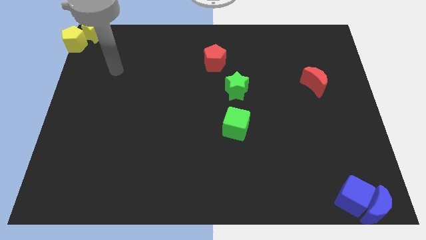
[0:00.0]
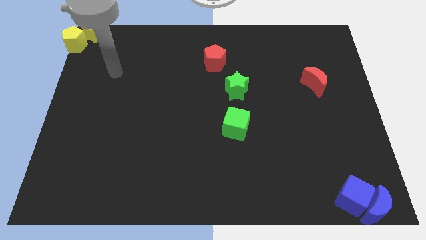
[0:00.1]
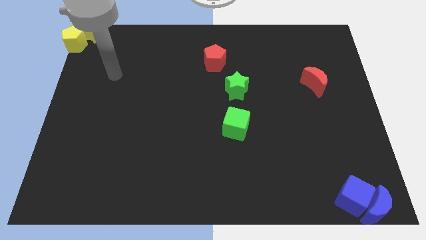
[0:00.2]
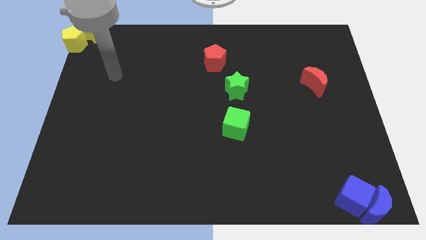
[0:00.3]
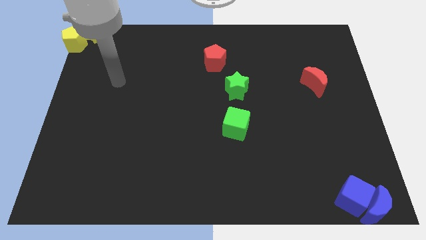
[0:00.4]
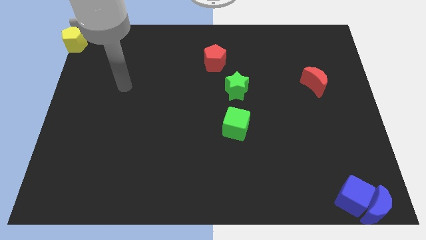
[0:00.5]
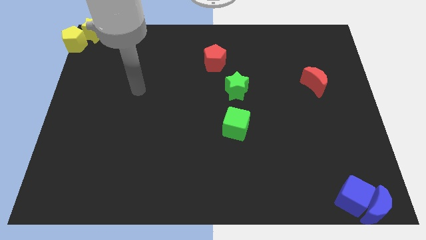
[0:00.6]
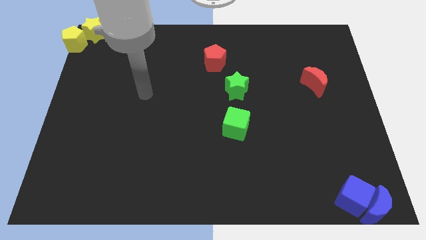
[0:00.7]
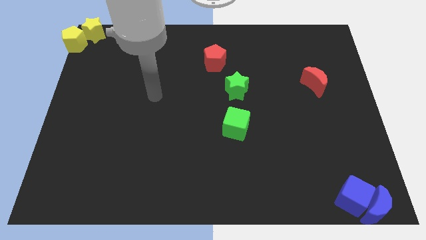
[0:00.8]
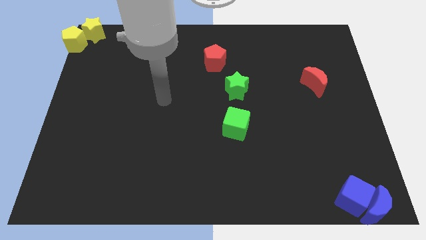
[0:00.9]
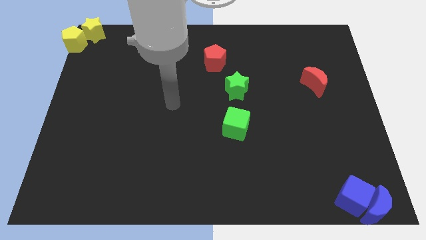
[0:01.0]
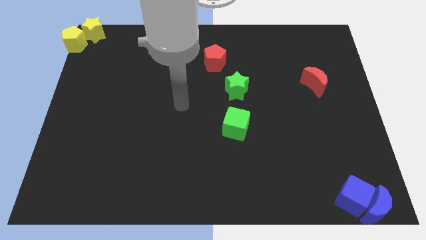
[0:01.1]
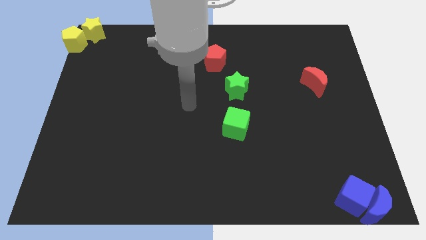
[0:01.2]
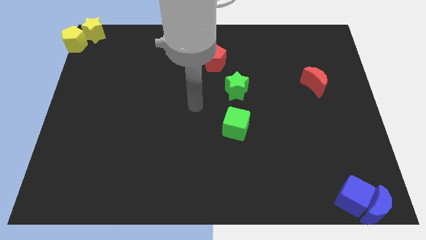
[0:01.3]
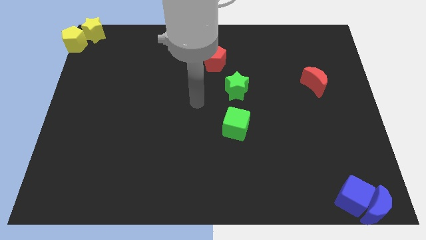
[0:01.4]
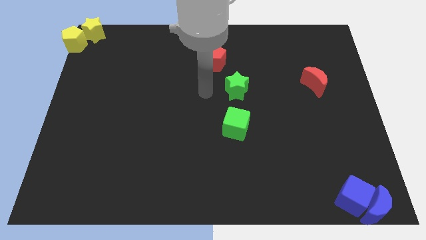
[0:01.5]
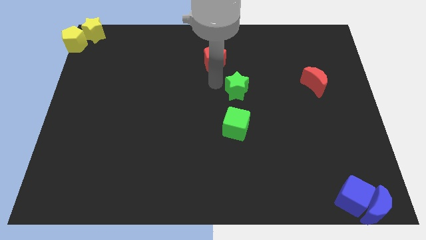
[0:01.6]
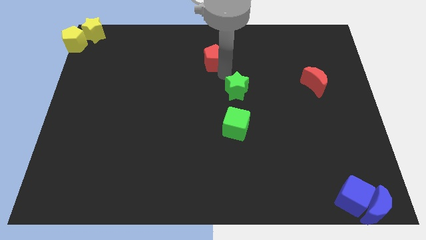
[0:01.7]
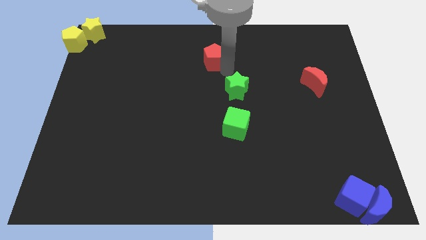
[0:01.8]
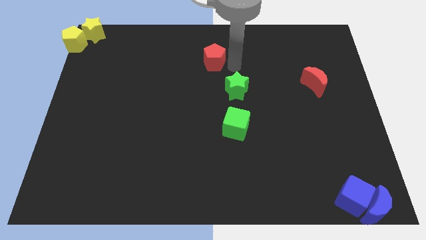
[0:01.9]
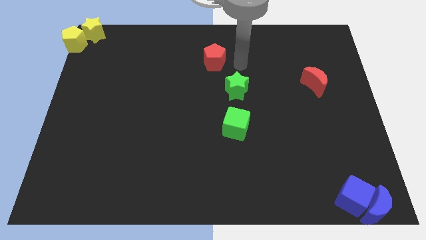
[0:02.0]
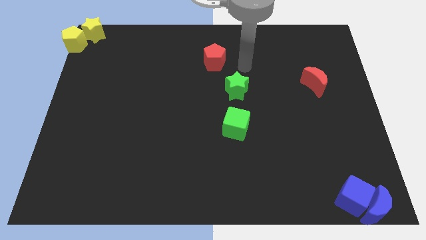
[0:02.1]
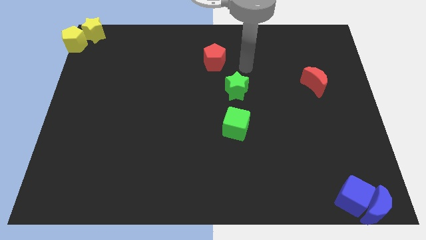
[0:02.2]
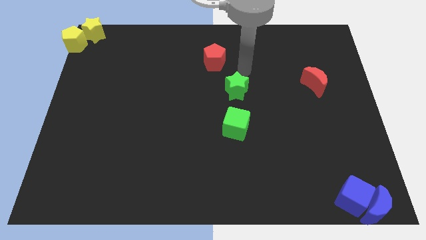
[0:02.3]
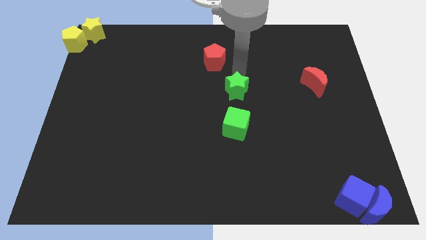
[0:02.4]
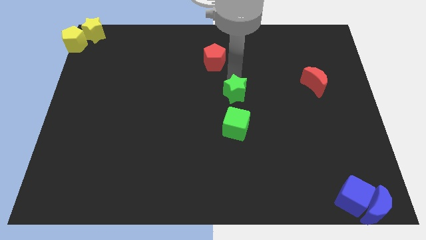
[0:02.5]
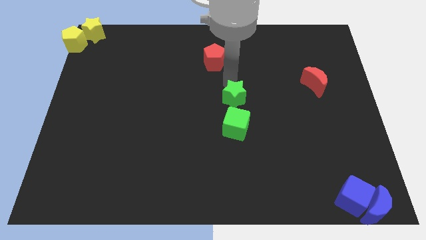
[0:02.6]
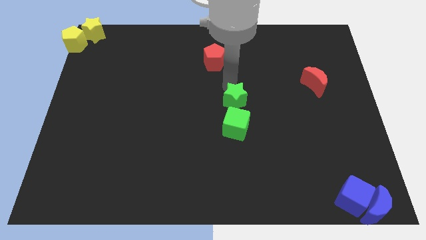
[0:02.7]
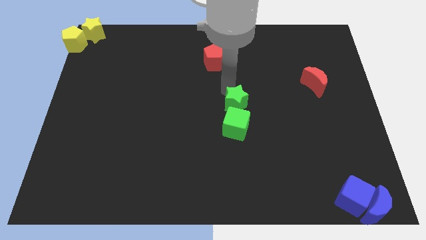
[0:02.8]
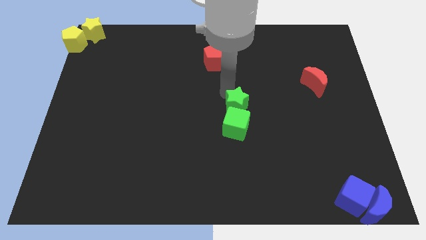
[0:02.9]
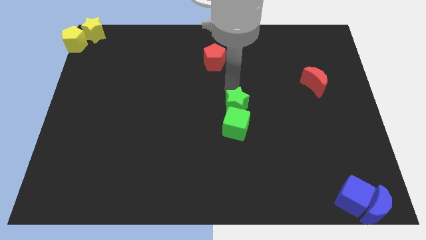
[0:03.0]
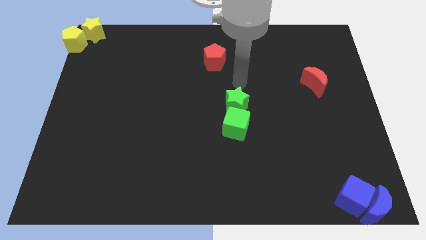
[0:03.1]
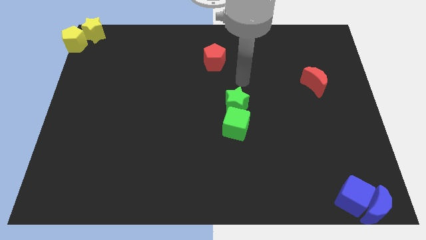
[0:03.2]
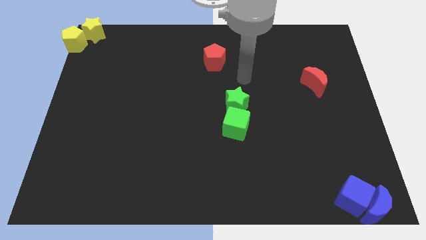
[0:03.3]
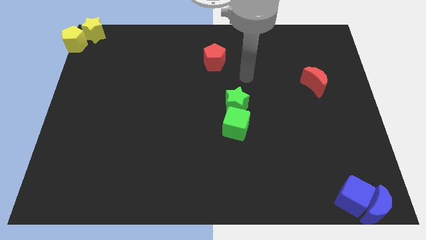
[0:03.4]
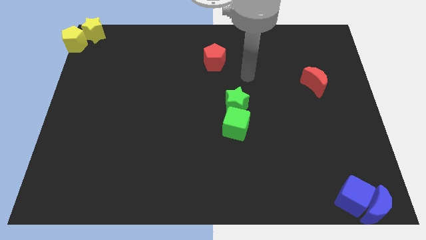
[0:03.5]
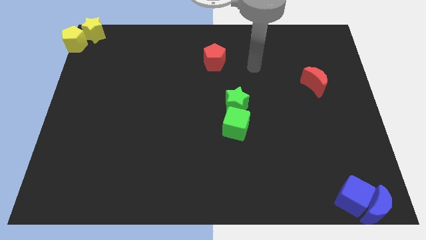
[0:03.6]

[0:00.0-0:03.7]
move the green star slightly downwards

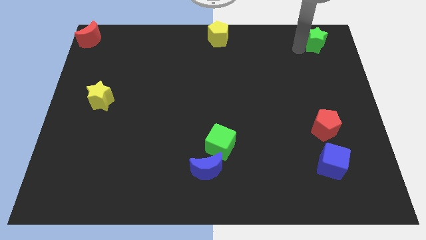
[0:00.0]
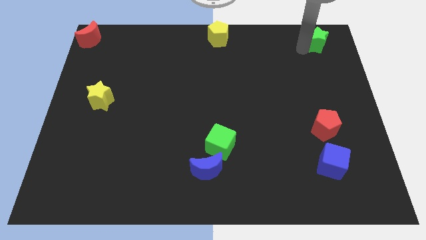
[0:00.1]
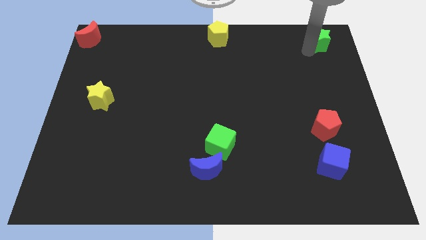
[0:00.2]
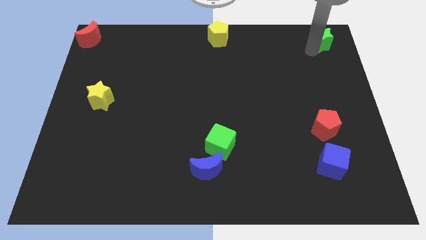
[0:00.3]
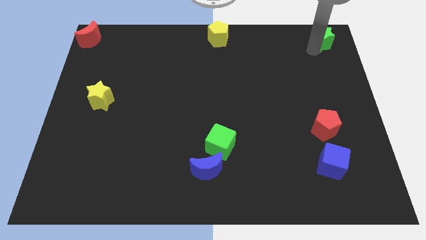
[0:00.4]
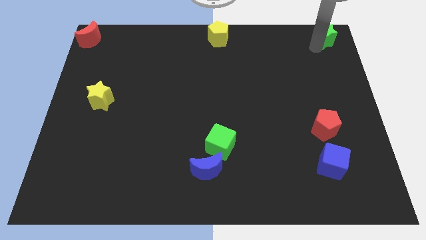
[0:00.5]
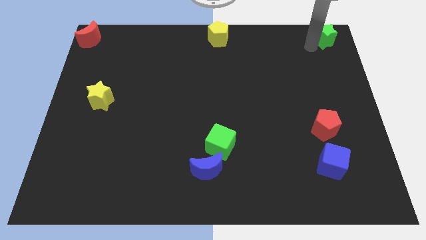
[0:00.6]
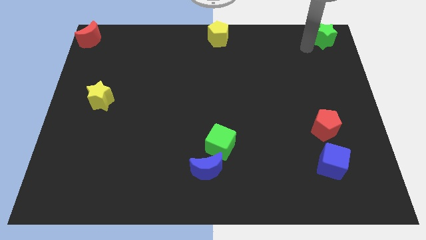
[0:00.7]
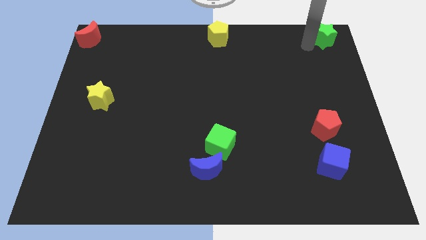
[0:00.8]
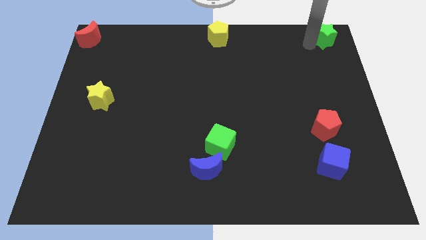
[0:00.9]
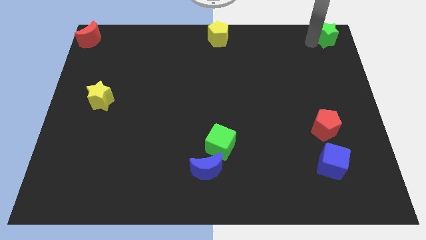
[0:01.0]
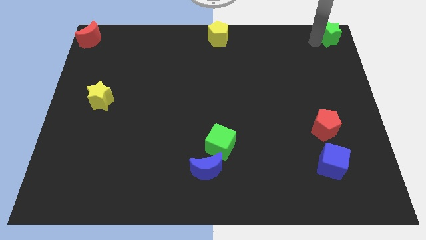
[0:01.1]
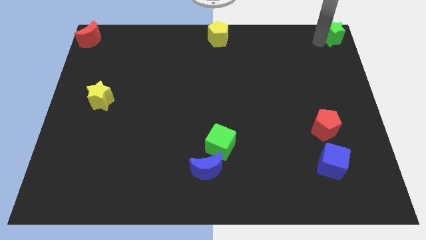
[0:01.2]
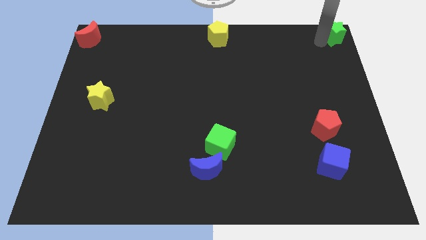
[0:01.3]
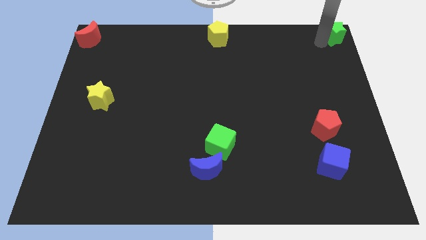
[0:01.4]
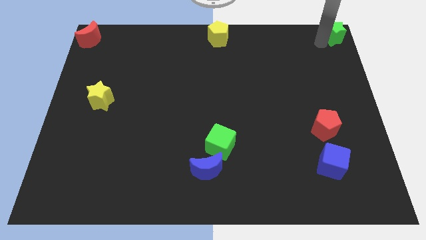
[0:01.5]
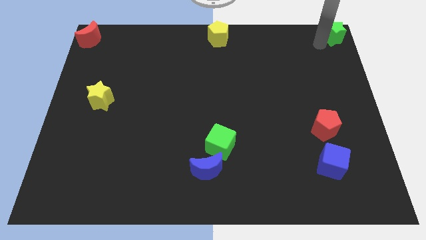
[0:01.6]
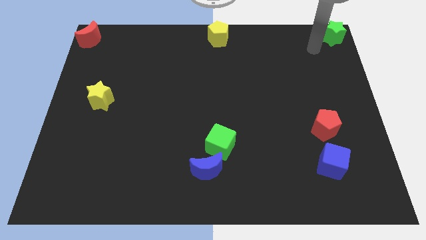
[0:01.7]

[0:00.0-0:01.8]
place the green star to the top right of the board

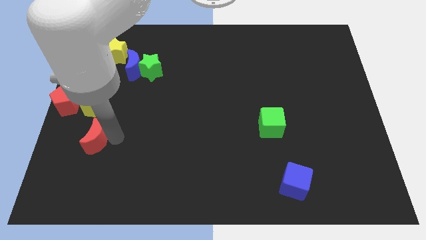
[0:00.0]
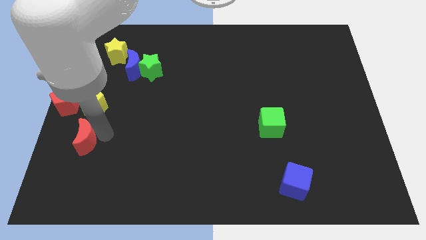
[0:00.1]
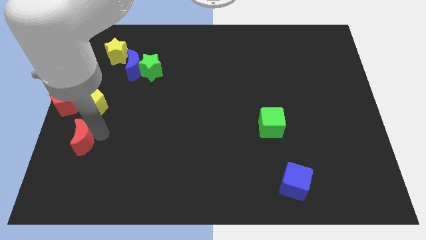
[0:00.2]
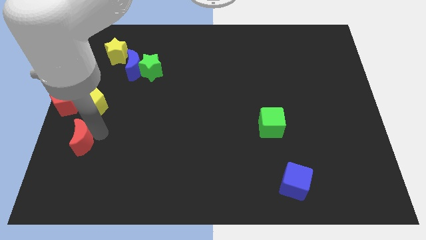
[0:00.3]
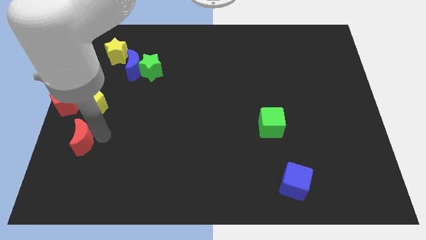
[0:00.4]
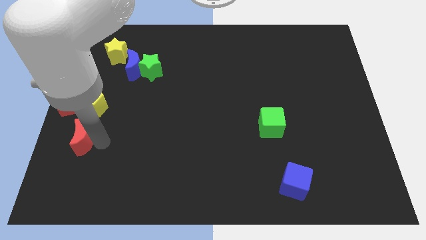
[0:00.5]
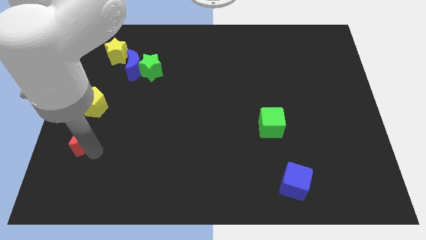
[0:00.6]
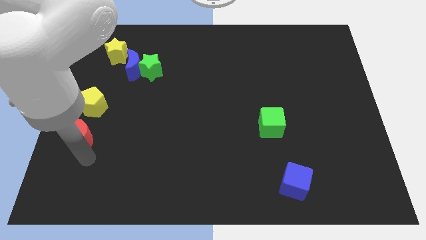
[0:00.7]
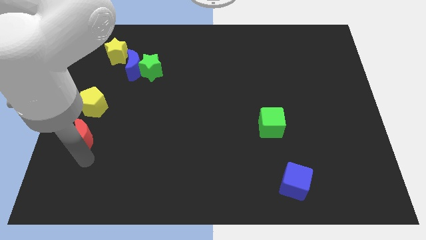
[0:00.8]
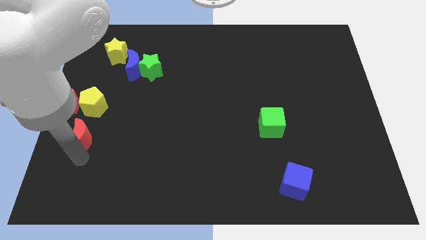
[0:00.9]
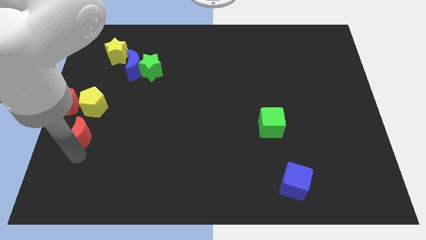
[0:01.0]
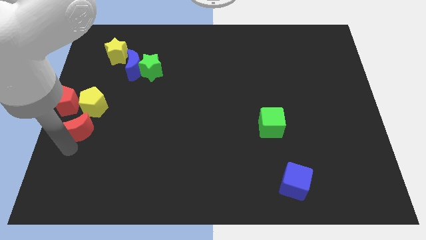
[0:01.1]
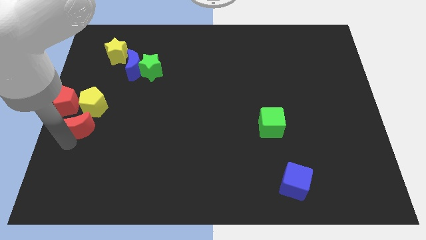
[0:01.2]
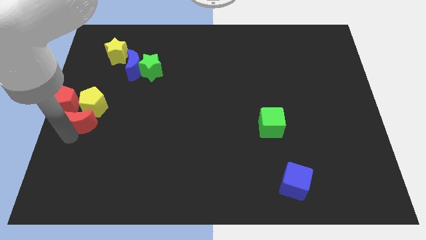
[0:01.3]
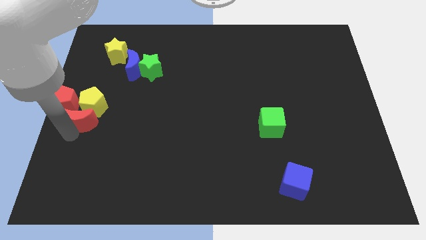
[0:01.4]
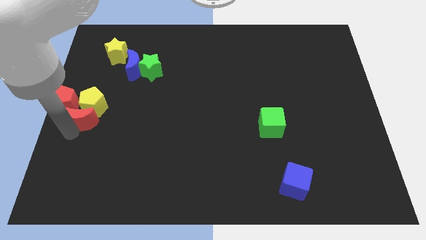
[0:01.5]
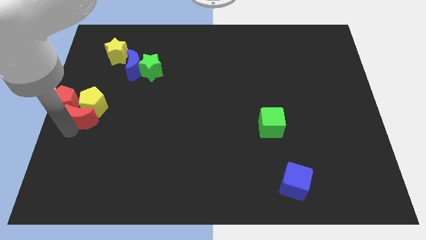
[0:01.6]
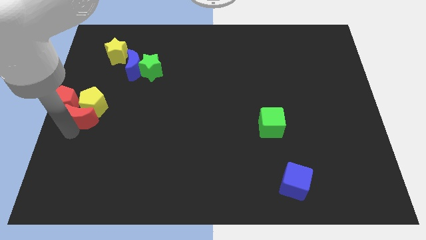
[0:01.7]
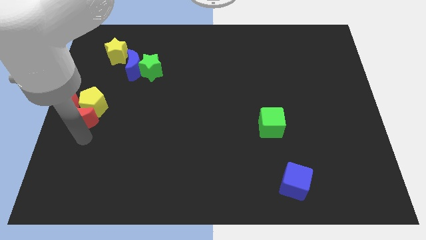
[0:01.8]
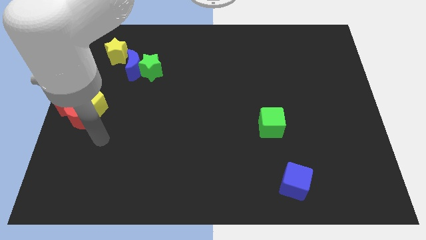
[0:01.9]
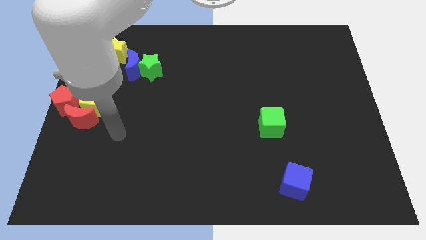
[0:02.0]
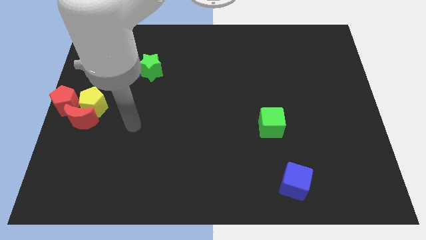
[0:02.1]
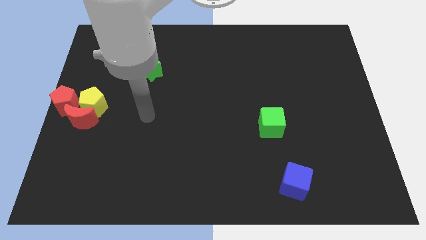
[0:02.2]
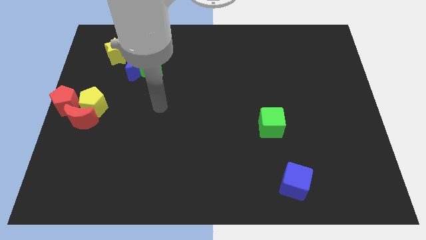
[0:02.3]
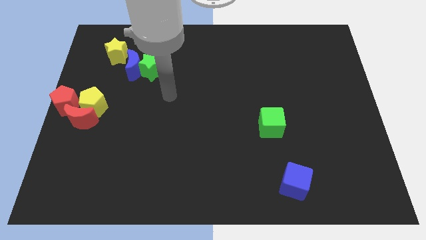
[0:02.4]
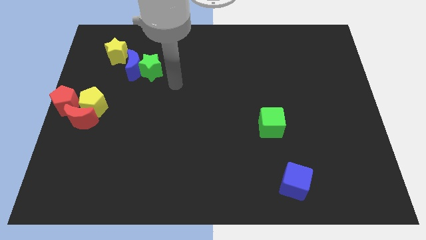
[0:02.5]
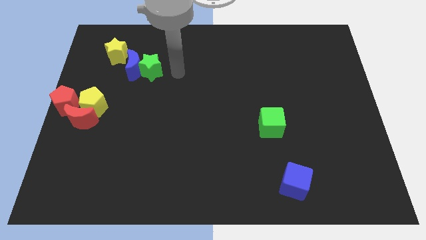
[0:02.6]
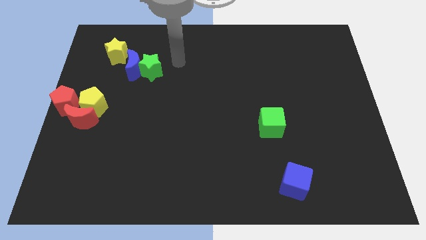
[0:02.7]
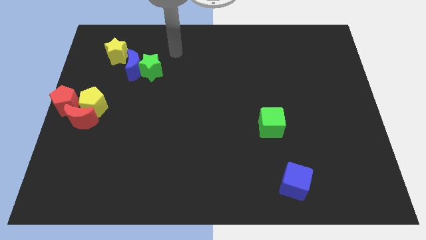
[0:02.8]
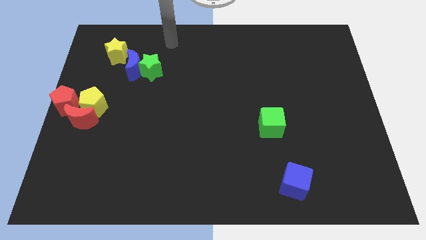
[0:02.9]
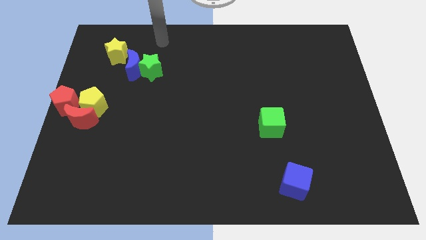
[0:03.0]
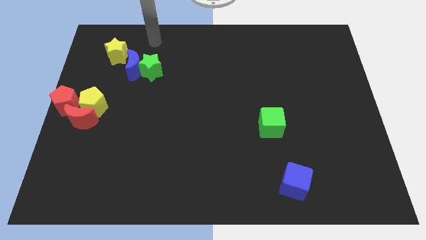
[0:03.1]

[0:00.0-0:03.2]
make a group of red pentagon yellow pentagon and red moon

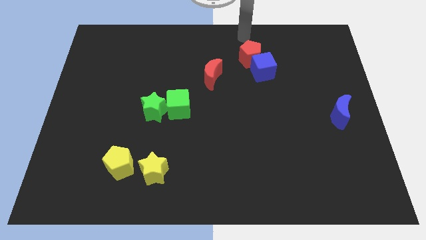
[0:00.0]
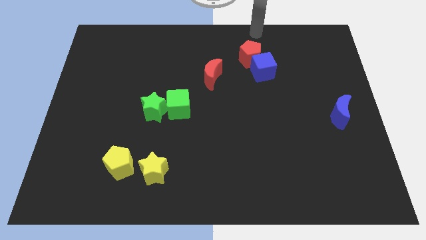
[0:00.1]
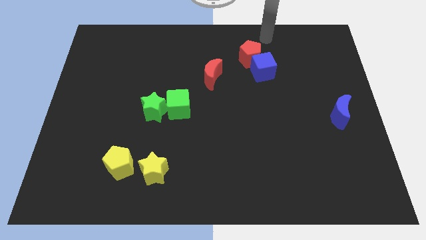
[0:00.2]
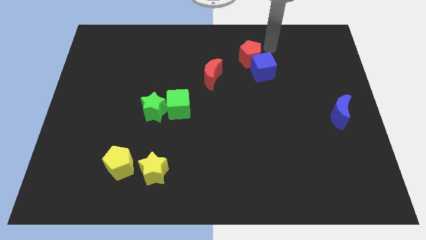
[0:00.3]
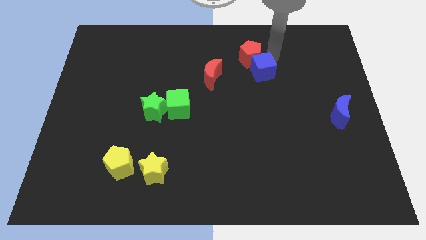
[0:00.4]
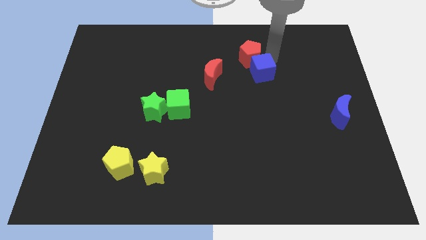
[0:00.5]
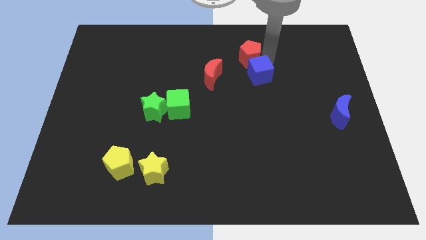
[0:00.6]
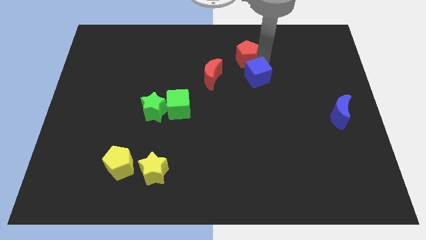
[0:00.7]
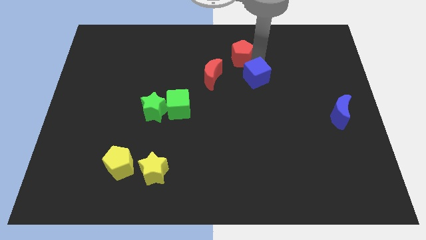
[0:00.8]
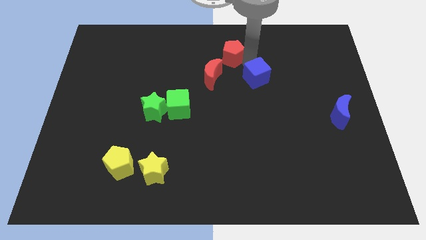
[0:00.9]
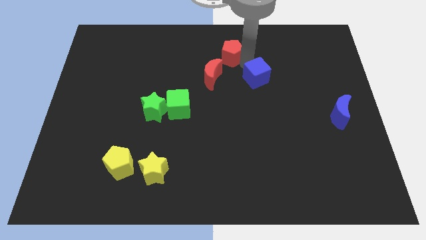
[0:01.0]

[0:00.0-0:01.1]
separate the red pentagon and blue cube
